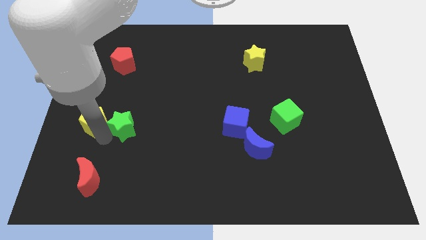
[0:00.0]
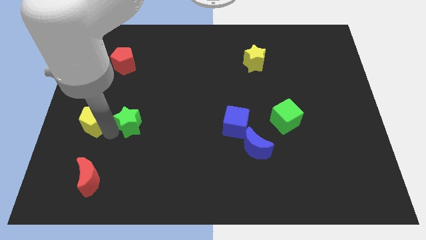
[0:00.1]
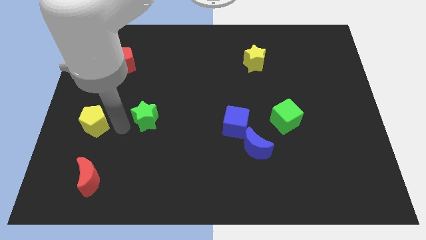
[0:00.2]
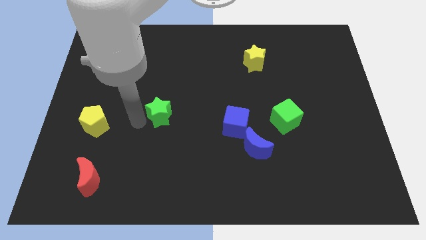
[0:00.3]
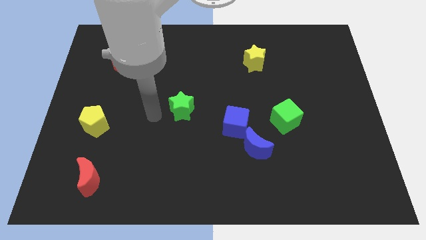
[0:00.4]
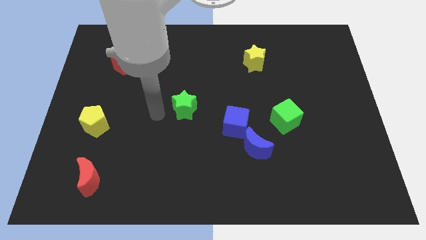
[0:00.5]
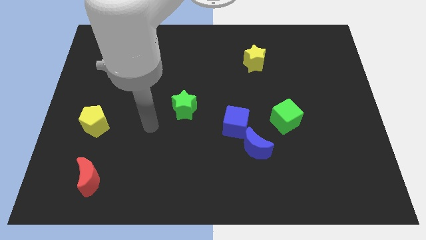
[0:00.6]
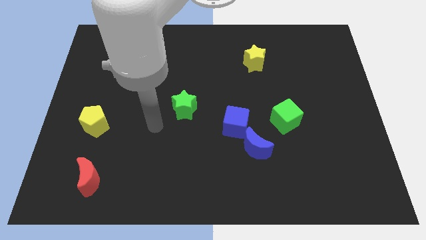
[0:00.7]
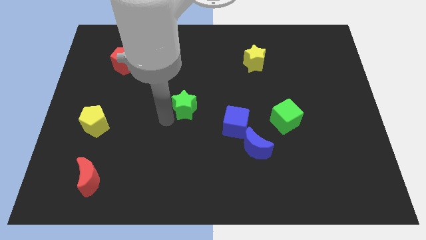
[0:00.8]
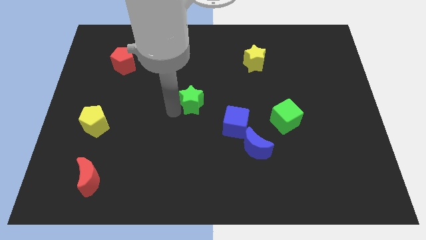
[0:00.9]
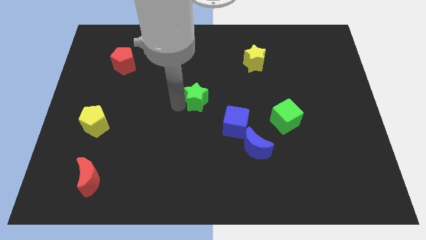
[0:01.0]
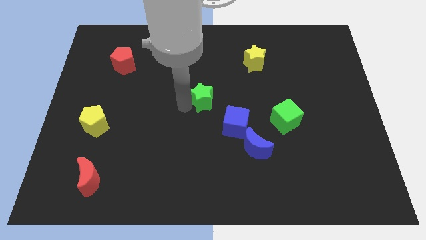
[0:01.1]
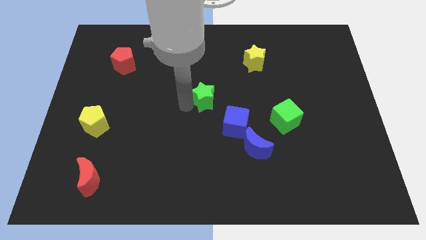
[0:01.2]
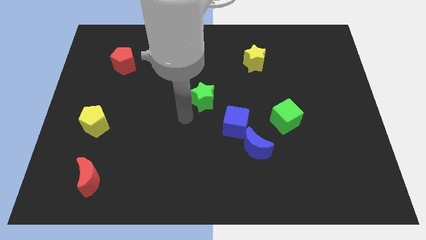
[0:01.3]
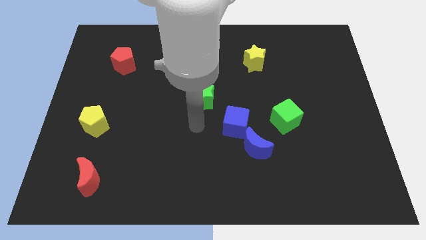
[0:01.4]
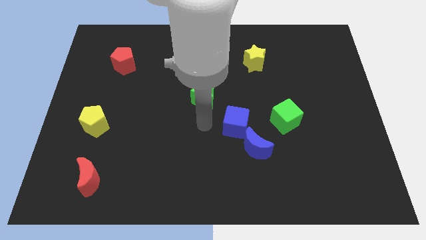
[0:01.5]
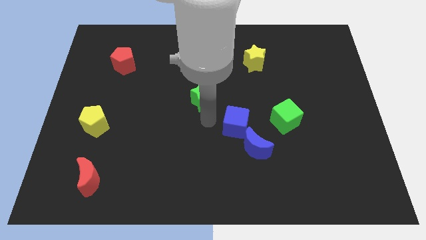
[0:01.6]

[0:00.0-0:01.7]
separate the green star from the yellow pentagon

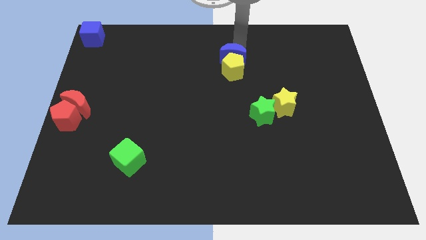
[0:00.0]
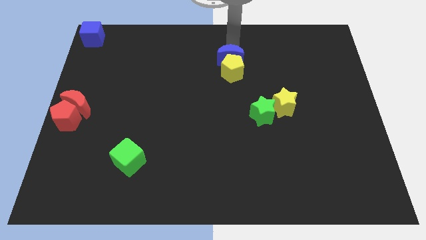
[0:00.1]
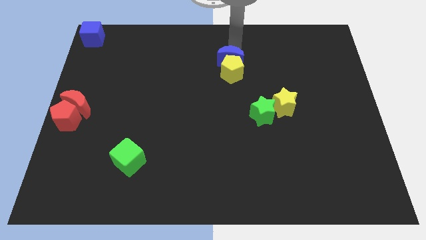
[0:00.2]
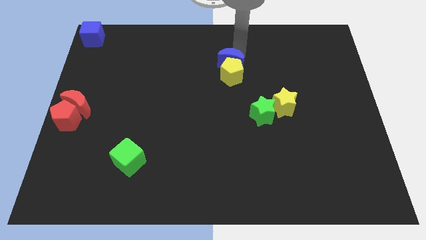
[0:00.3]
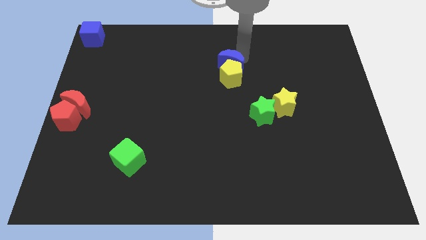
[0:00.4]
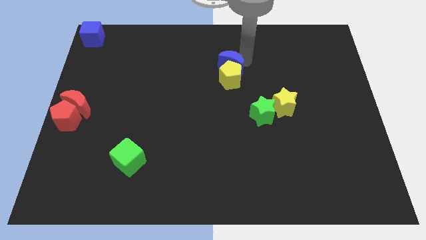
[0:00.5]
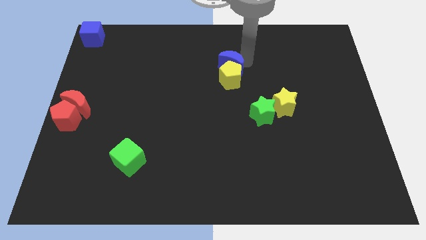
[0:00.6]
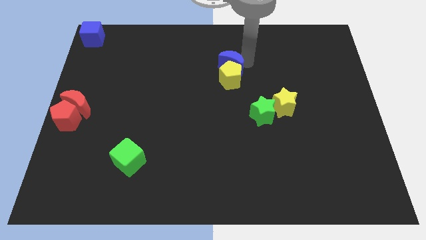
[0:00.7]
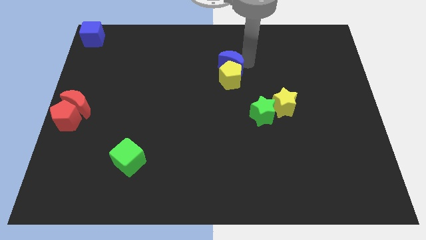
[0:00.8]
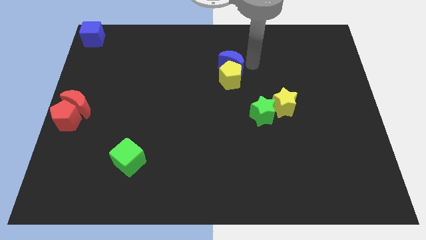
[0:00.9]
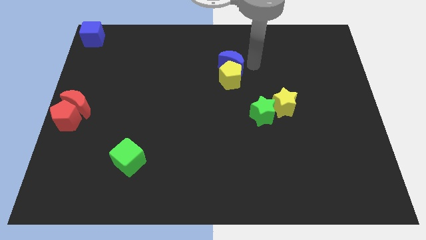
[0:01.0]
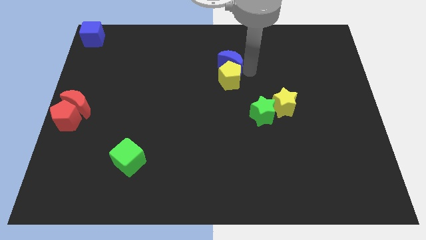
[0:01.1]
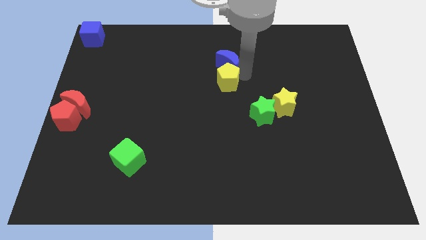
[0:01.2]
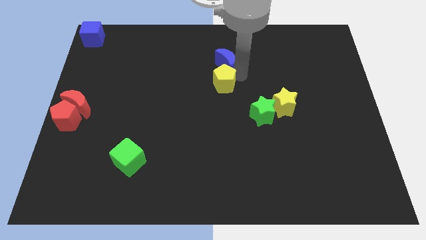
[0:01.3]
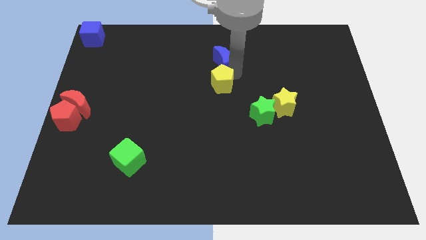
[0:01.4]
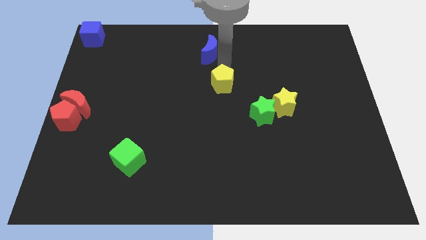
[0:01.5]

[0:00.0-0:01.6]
move the yellow pentagon along with the blue moon to the center

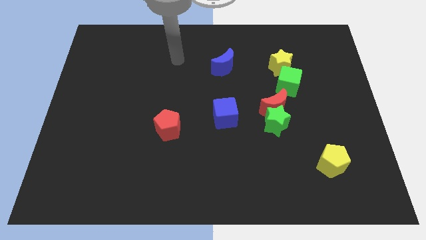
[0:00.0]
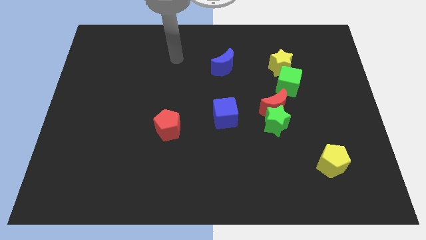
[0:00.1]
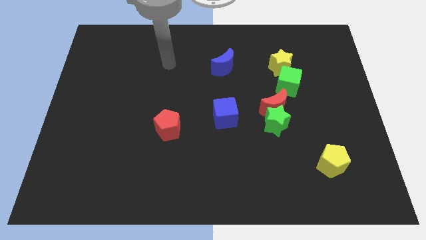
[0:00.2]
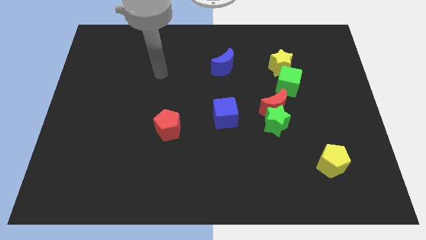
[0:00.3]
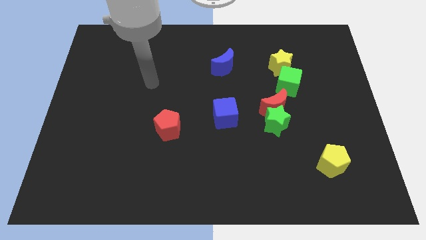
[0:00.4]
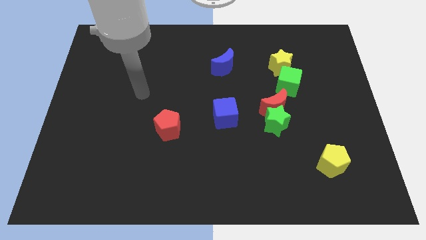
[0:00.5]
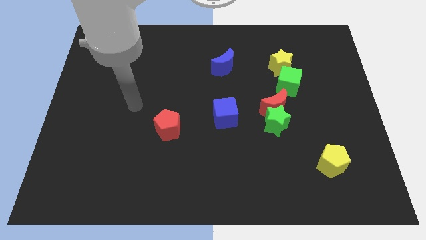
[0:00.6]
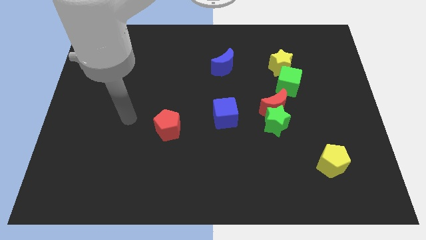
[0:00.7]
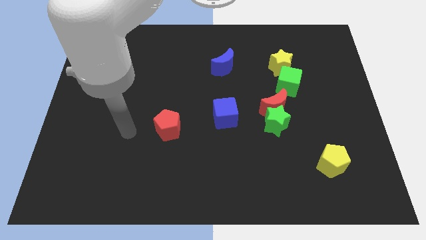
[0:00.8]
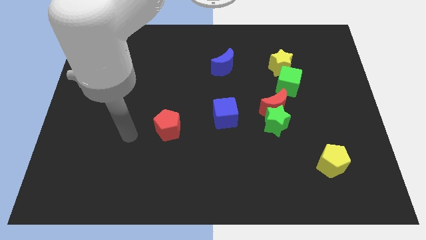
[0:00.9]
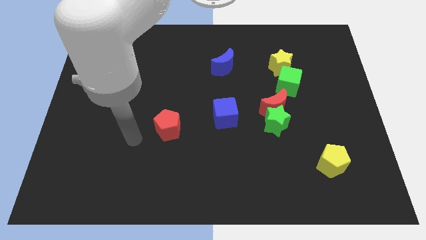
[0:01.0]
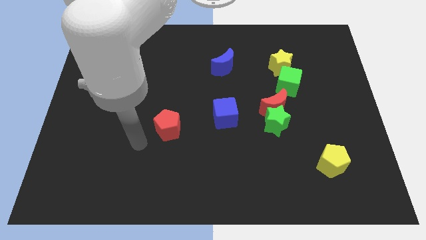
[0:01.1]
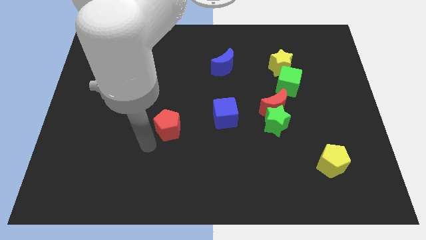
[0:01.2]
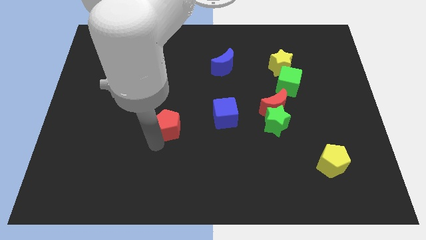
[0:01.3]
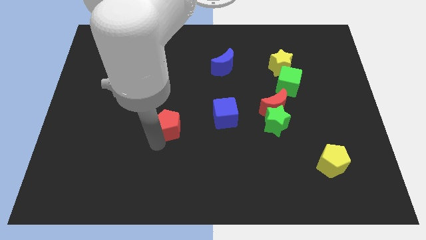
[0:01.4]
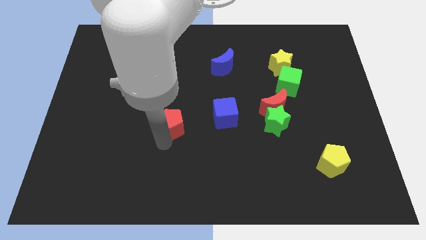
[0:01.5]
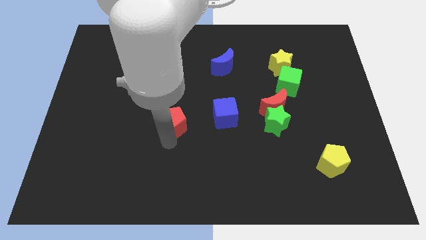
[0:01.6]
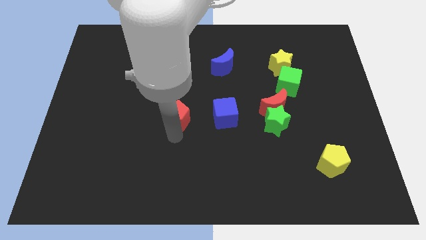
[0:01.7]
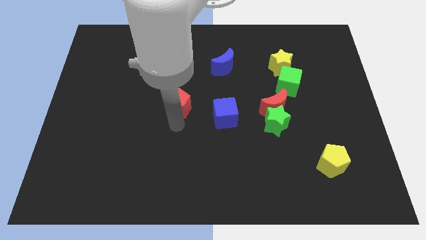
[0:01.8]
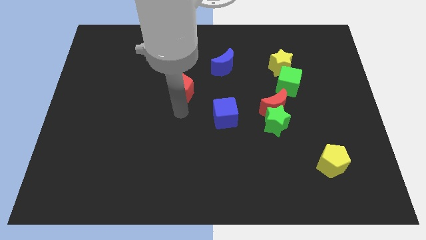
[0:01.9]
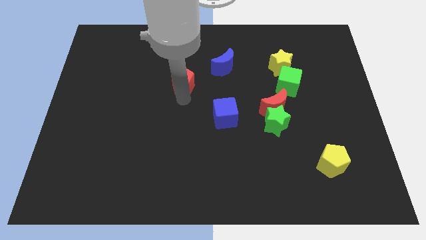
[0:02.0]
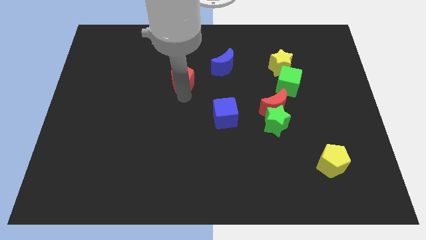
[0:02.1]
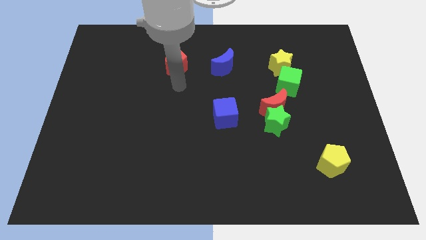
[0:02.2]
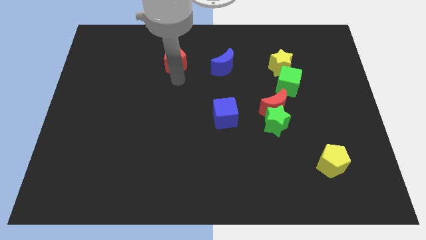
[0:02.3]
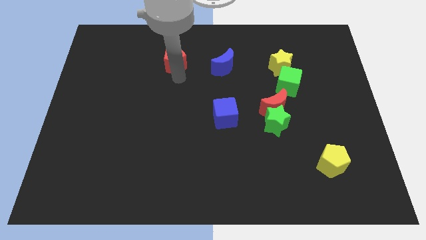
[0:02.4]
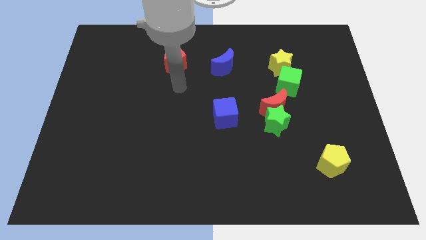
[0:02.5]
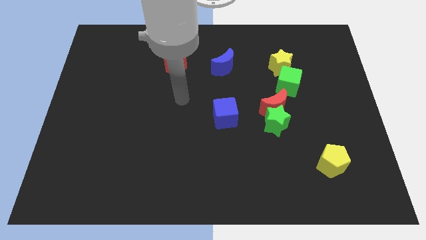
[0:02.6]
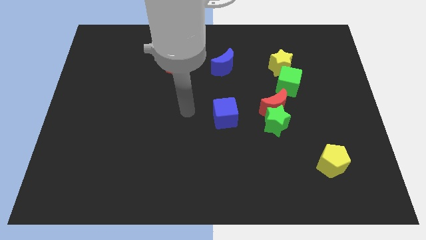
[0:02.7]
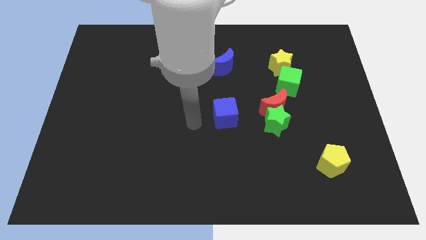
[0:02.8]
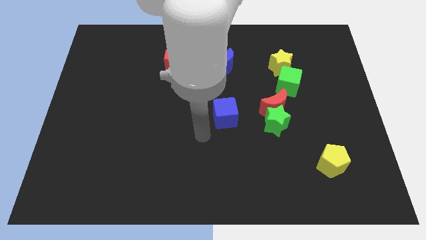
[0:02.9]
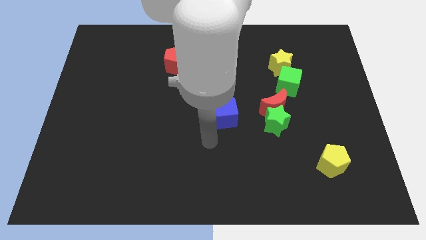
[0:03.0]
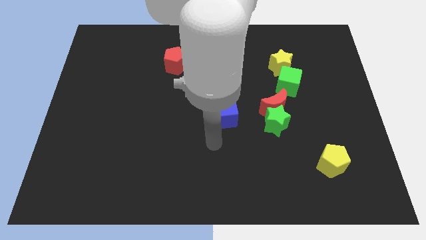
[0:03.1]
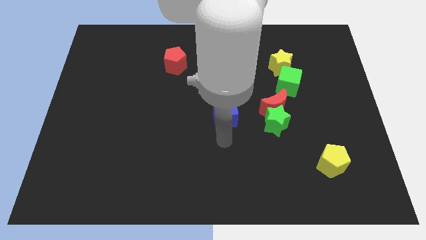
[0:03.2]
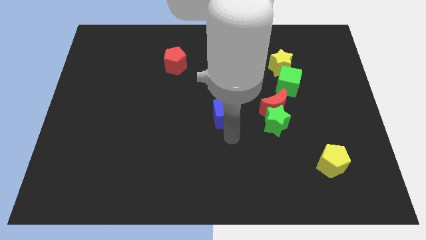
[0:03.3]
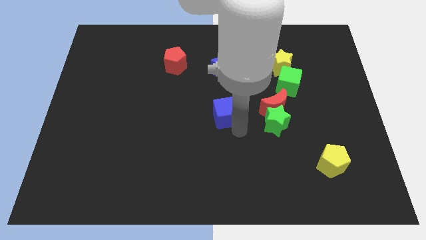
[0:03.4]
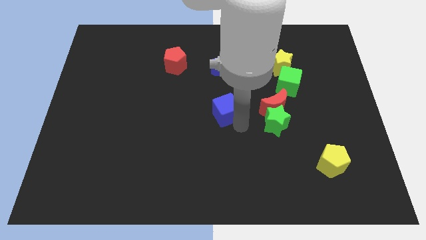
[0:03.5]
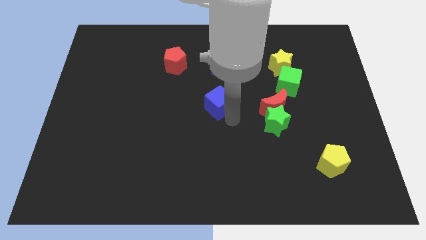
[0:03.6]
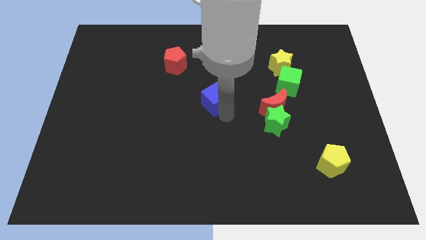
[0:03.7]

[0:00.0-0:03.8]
move your arm towards the blue cube

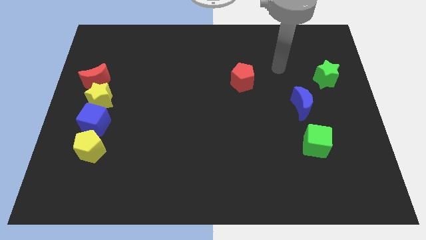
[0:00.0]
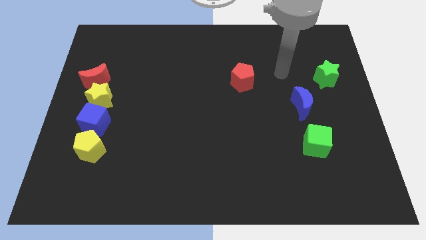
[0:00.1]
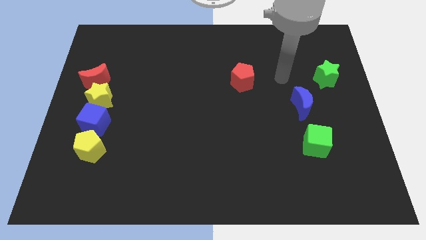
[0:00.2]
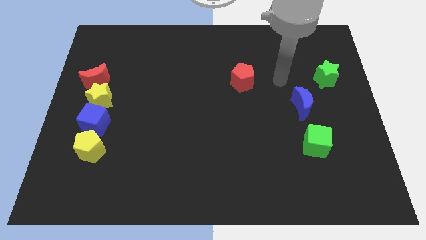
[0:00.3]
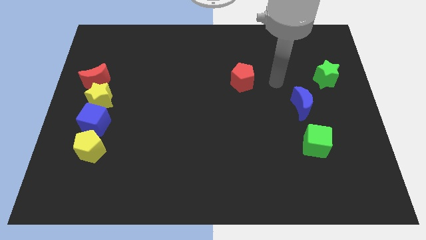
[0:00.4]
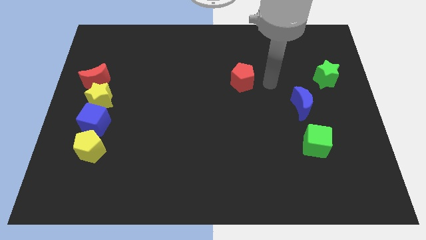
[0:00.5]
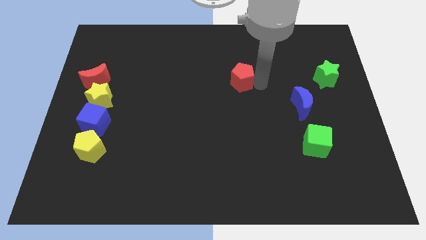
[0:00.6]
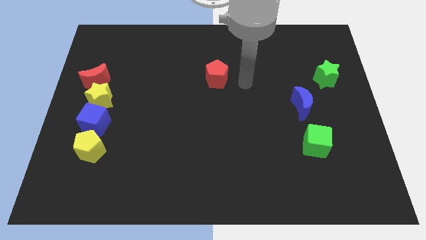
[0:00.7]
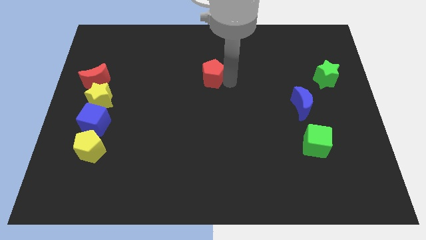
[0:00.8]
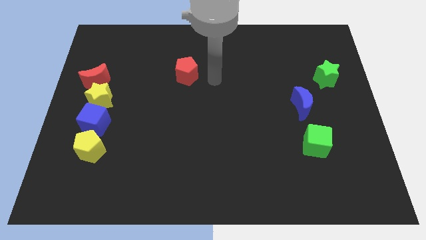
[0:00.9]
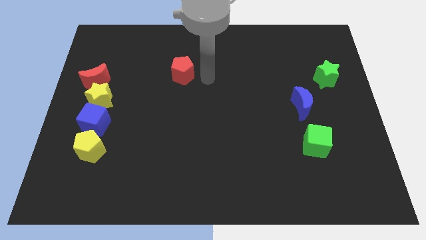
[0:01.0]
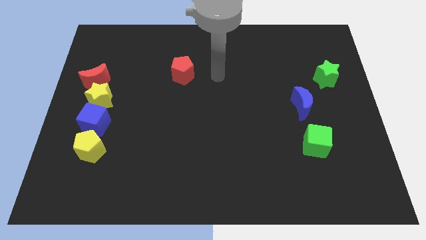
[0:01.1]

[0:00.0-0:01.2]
move the red pentagon to the left of the board

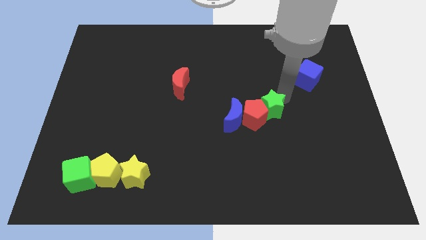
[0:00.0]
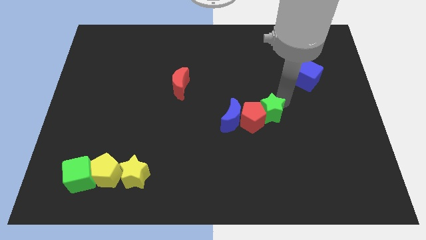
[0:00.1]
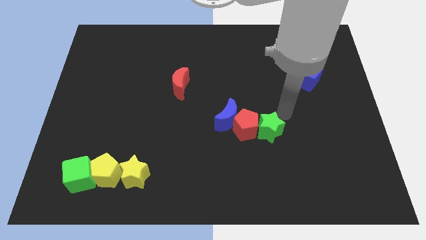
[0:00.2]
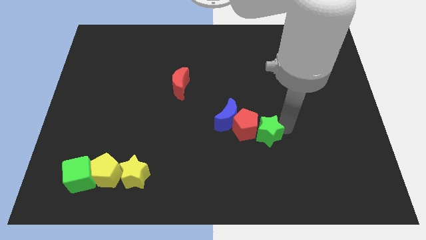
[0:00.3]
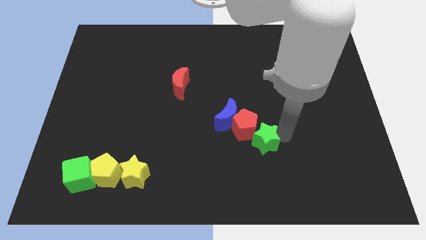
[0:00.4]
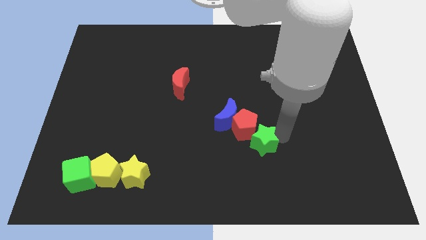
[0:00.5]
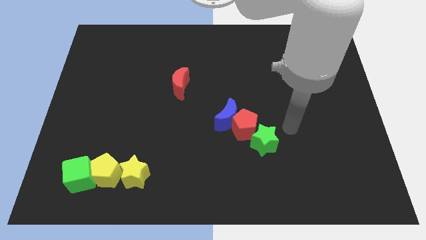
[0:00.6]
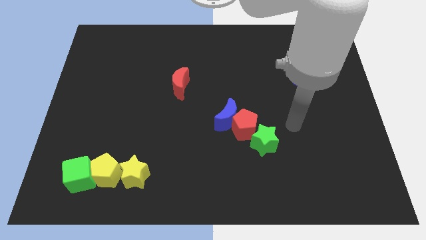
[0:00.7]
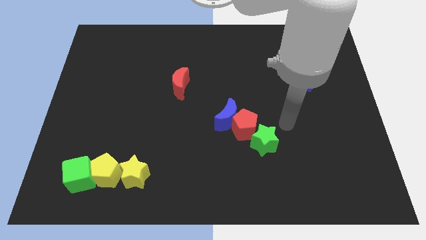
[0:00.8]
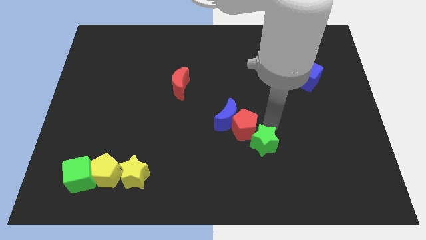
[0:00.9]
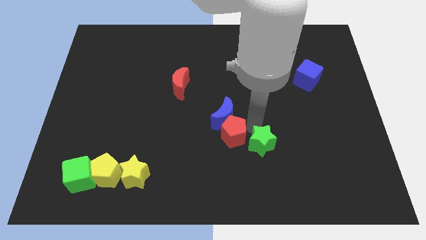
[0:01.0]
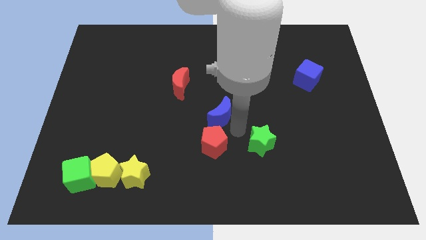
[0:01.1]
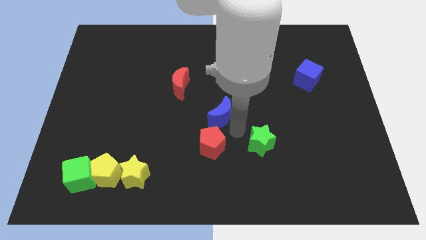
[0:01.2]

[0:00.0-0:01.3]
place red pentagon below blue crescent
